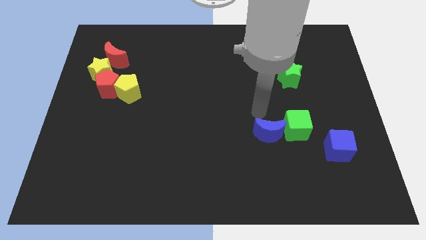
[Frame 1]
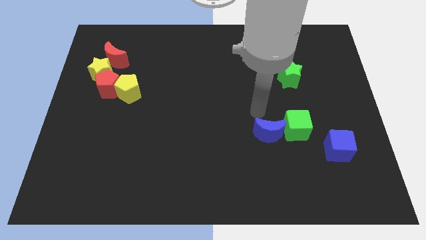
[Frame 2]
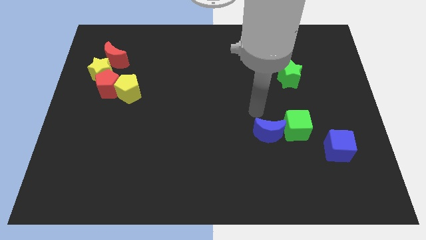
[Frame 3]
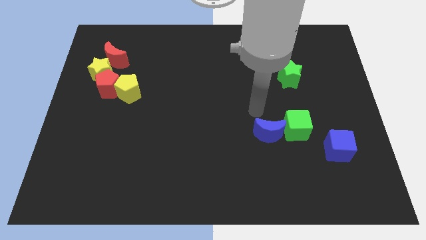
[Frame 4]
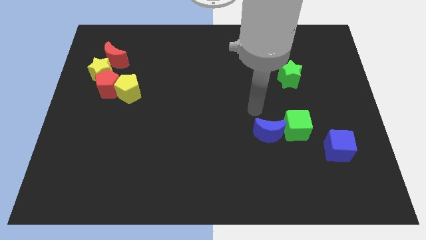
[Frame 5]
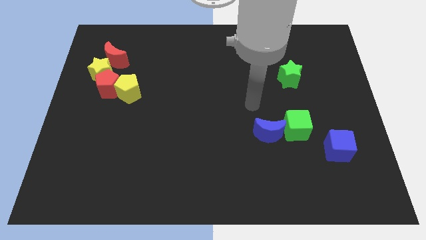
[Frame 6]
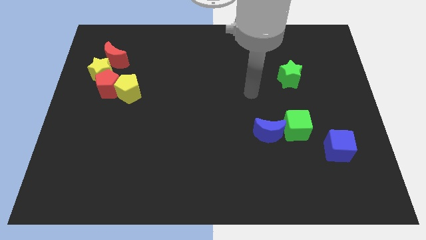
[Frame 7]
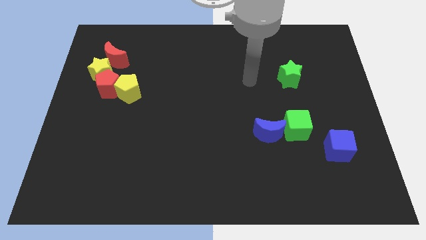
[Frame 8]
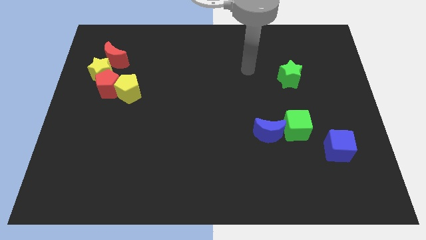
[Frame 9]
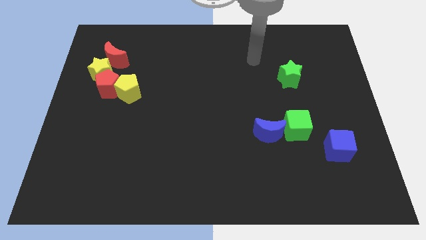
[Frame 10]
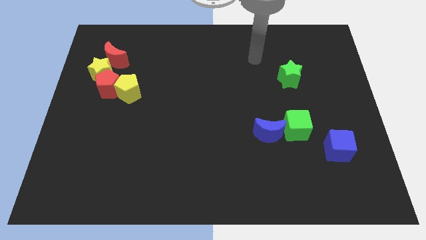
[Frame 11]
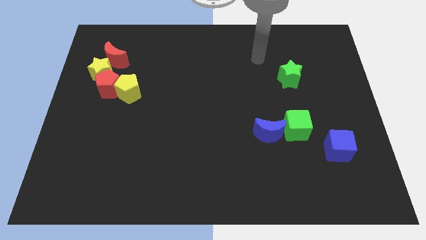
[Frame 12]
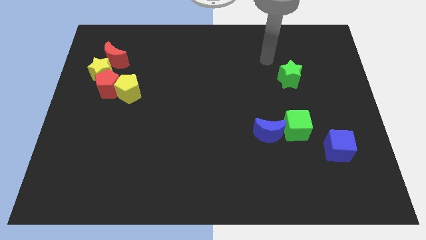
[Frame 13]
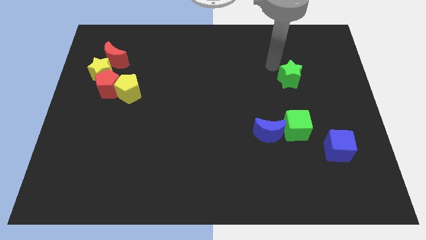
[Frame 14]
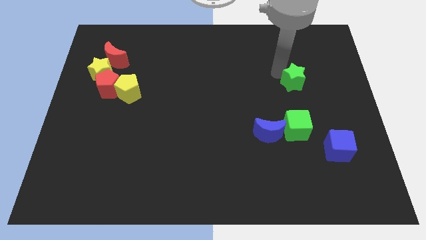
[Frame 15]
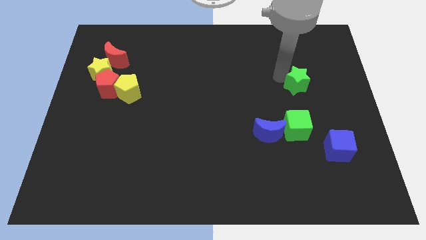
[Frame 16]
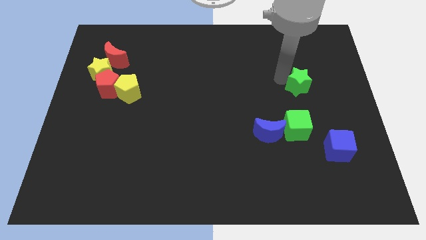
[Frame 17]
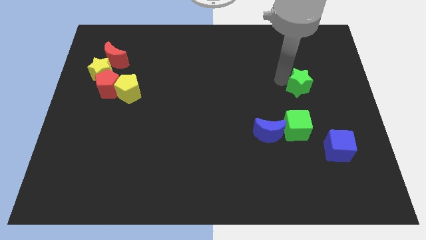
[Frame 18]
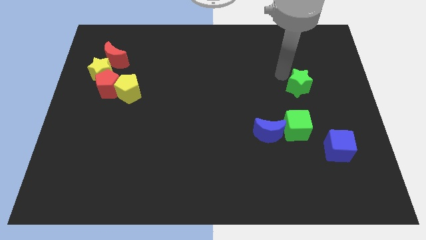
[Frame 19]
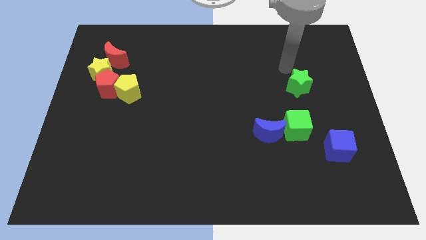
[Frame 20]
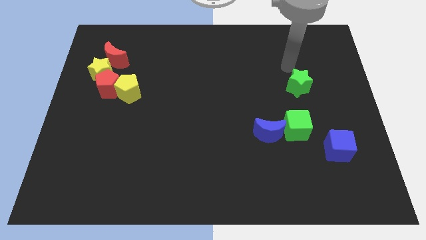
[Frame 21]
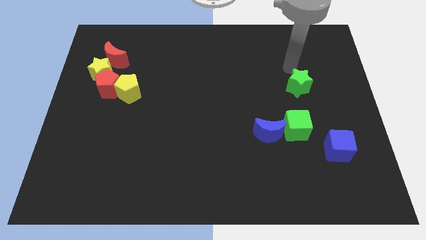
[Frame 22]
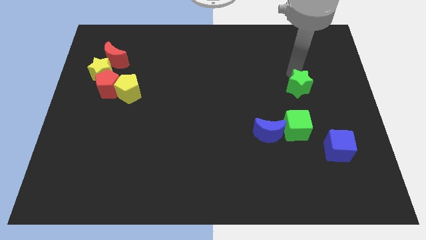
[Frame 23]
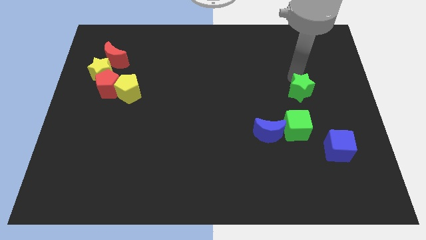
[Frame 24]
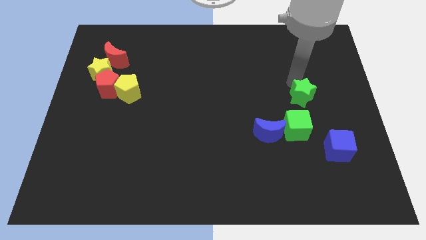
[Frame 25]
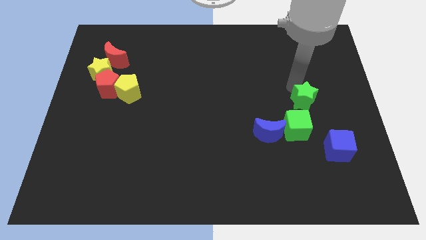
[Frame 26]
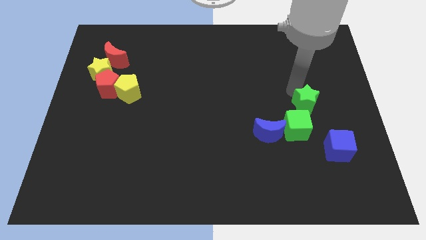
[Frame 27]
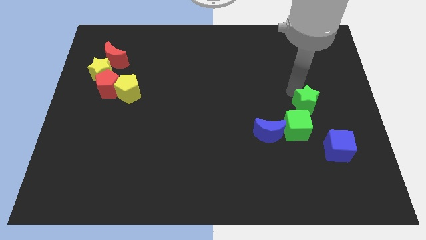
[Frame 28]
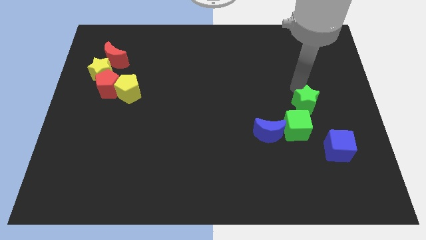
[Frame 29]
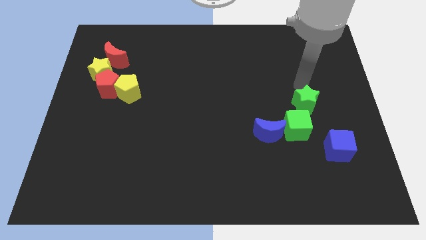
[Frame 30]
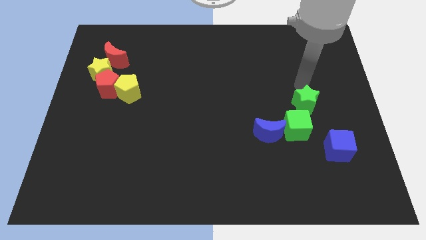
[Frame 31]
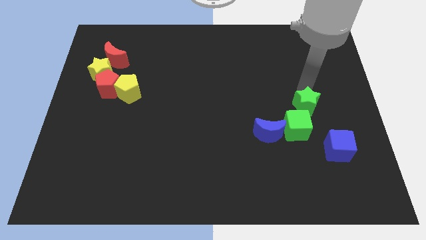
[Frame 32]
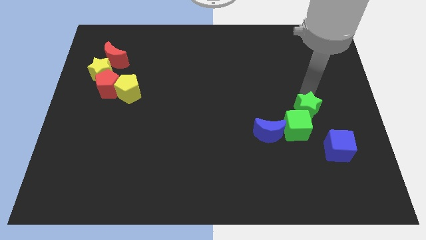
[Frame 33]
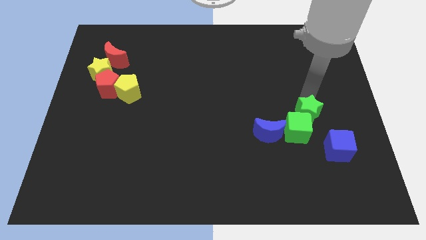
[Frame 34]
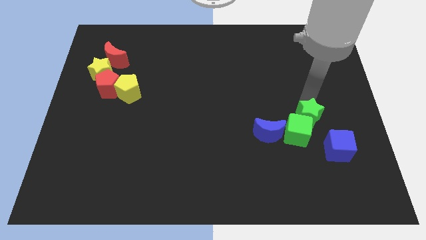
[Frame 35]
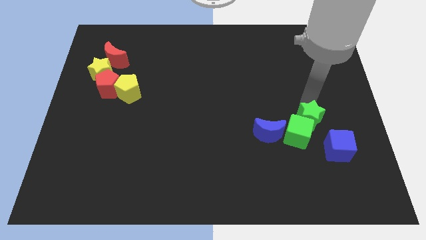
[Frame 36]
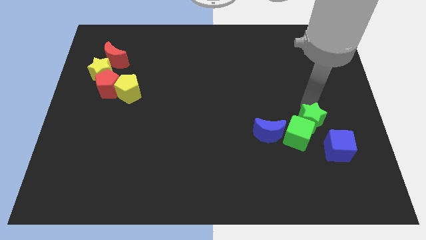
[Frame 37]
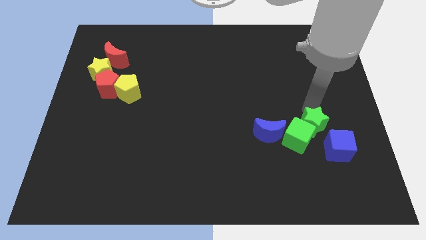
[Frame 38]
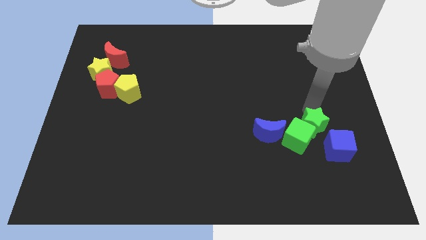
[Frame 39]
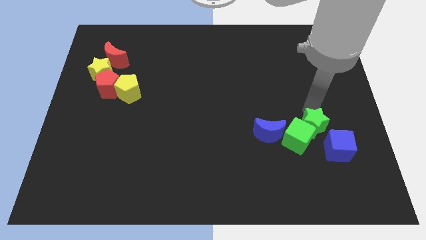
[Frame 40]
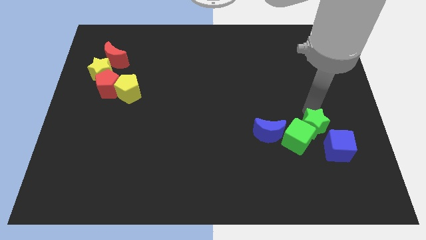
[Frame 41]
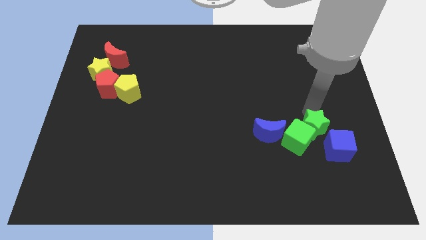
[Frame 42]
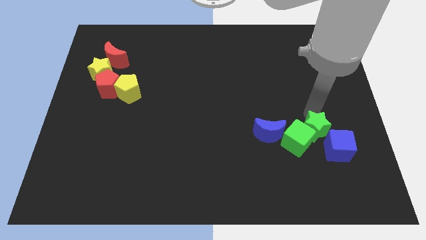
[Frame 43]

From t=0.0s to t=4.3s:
push the green star into the green cube

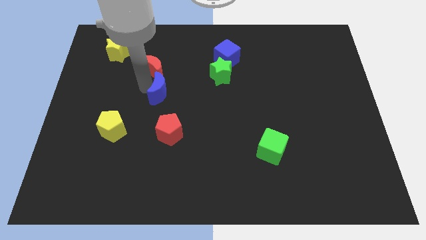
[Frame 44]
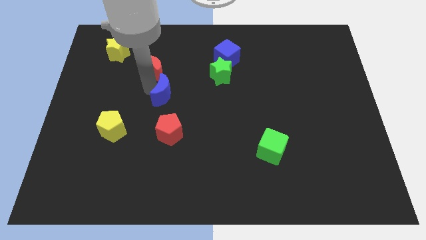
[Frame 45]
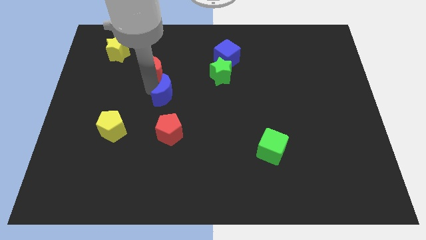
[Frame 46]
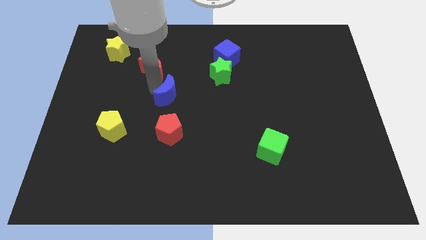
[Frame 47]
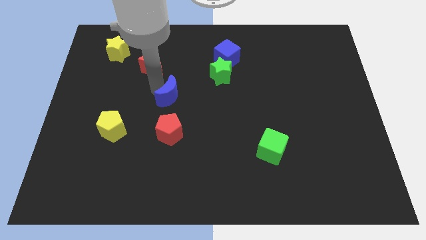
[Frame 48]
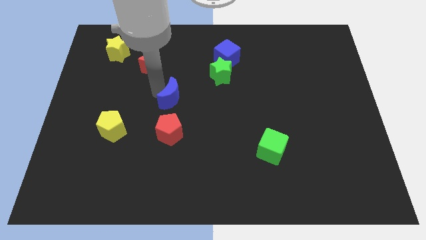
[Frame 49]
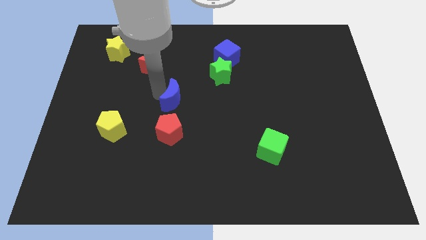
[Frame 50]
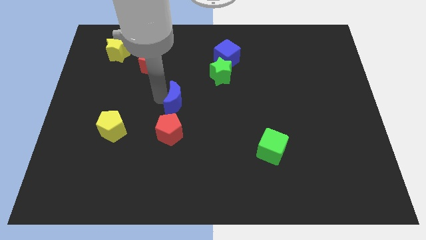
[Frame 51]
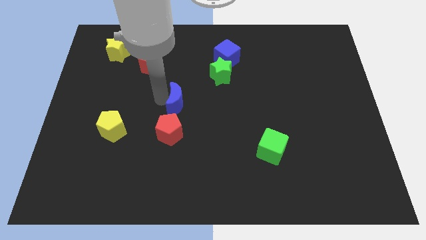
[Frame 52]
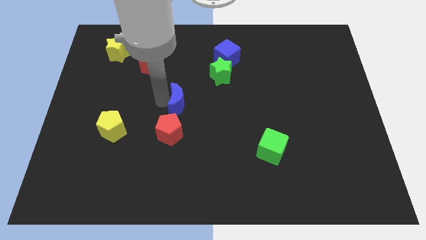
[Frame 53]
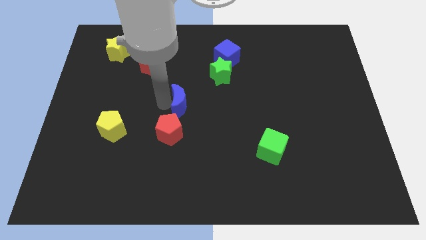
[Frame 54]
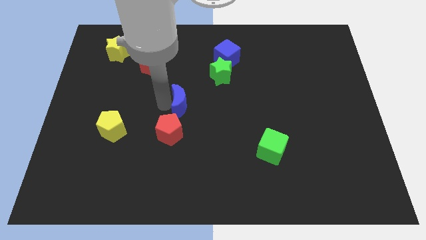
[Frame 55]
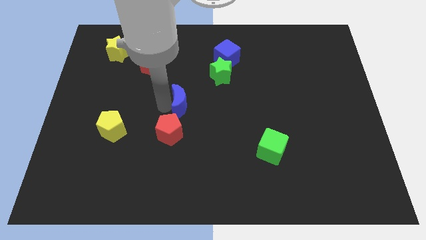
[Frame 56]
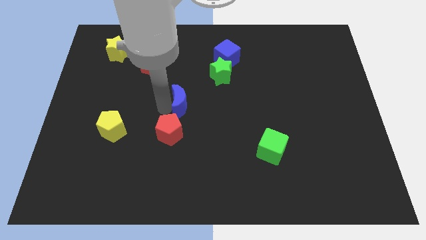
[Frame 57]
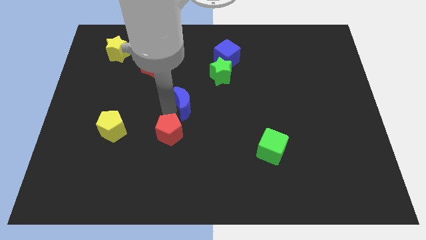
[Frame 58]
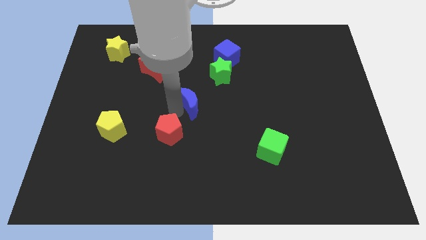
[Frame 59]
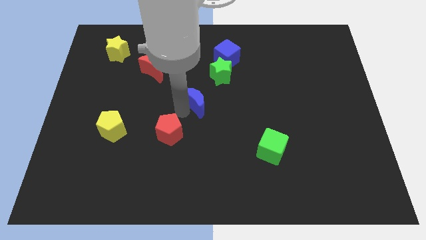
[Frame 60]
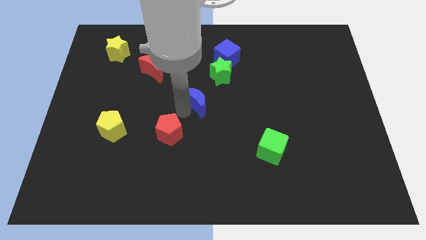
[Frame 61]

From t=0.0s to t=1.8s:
separate the blue moon from the red moon

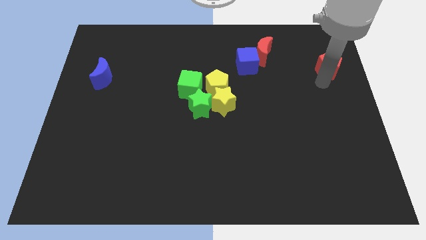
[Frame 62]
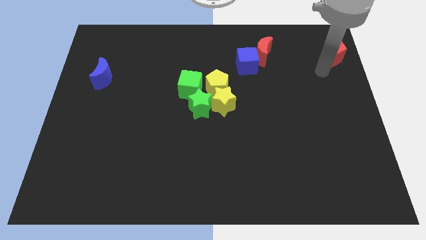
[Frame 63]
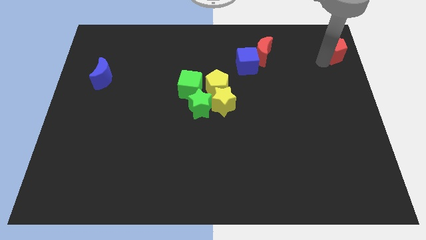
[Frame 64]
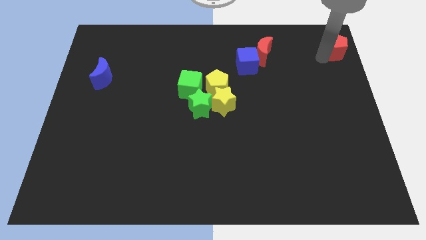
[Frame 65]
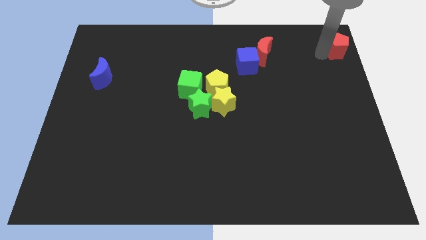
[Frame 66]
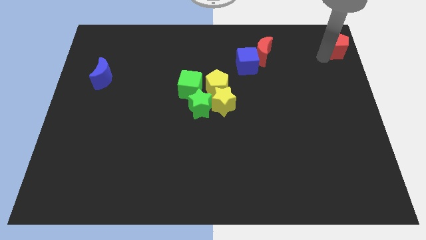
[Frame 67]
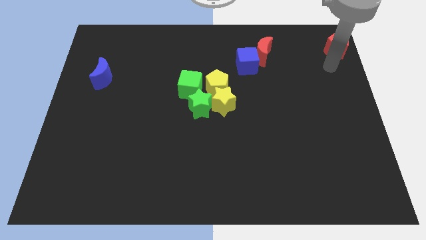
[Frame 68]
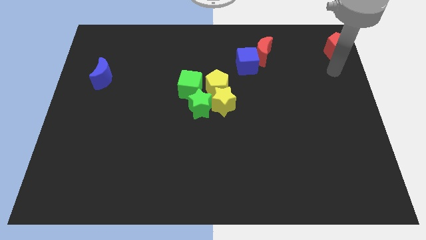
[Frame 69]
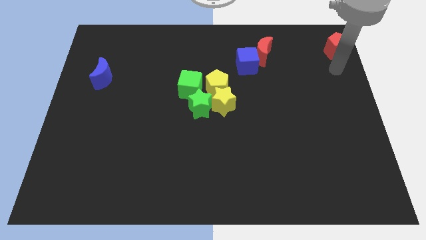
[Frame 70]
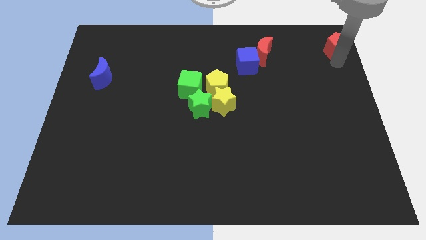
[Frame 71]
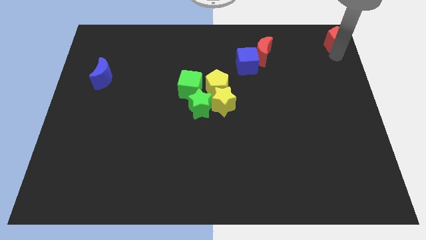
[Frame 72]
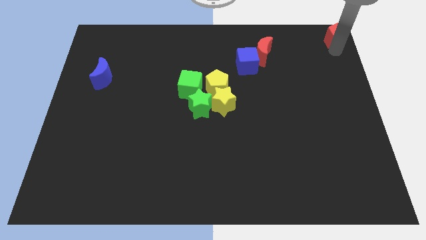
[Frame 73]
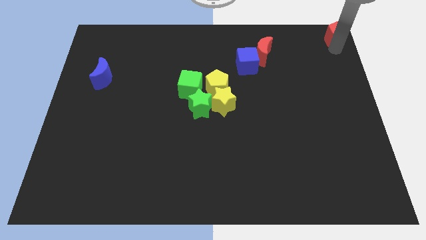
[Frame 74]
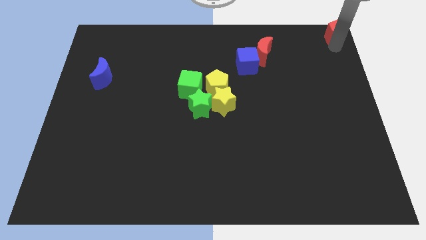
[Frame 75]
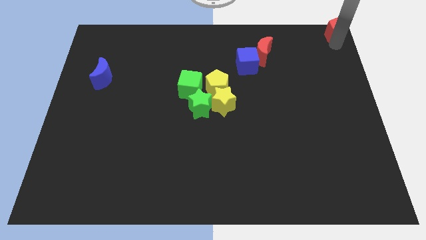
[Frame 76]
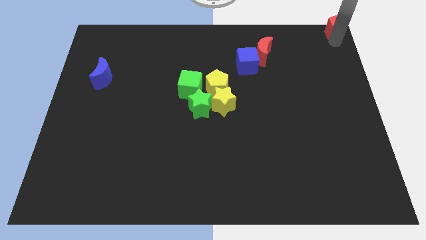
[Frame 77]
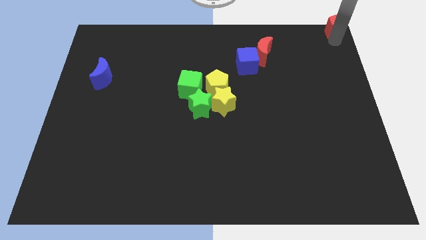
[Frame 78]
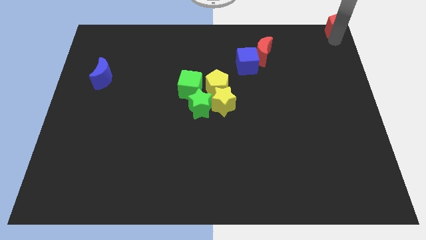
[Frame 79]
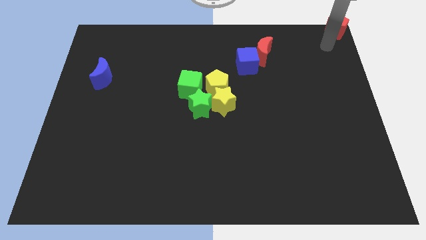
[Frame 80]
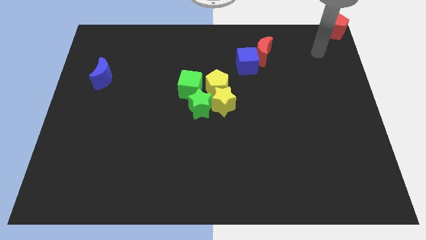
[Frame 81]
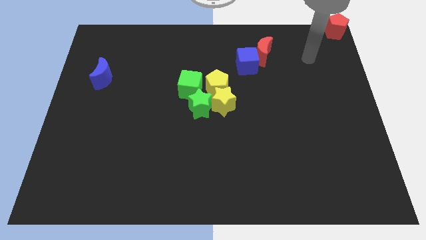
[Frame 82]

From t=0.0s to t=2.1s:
move the red crescent to the top right on the board

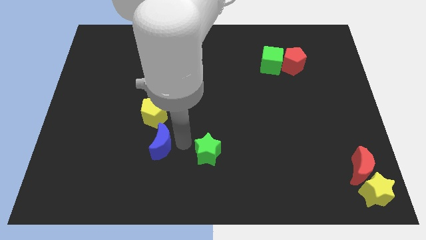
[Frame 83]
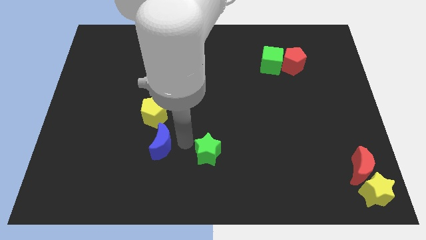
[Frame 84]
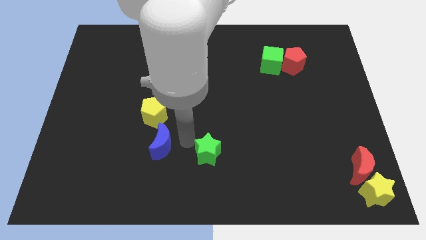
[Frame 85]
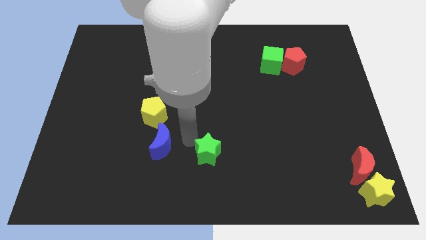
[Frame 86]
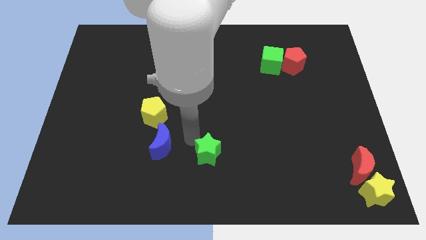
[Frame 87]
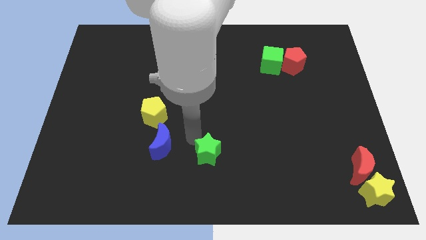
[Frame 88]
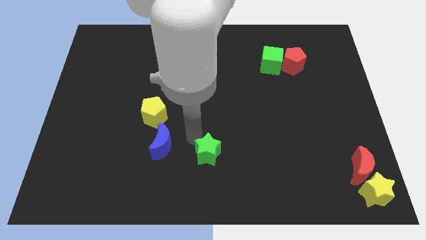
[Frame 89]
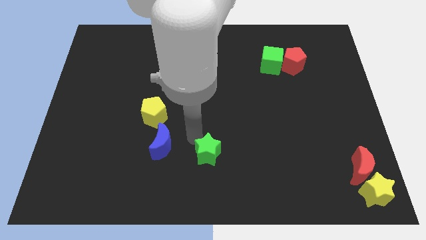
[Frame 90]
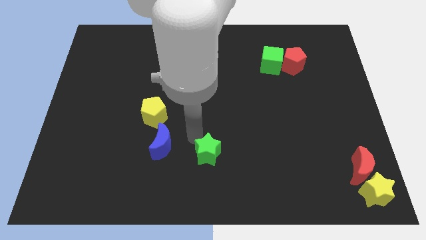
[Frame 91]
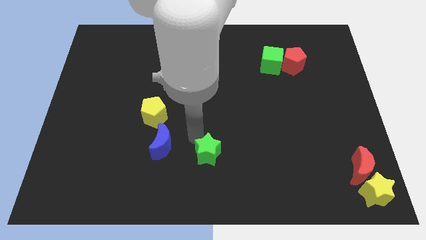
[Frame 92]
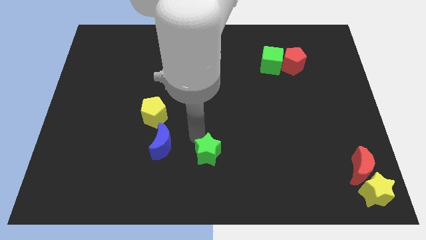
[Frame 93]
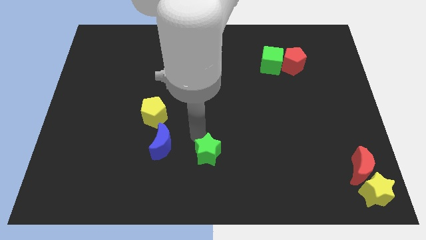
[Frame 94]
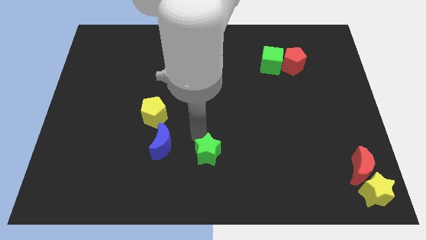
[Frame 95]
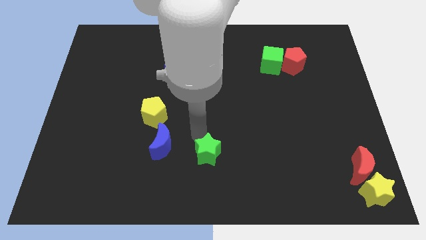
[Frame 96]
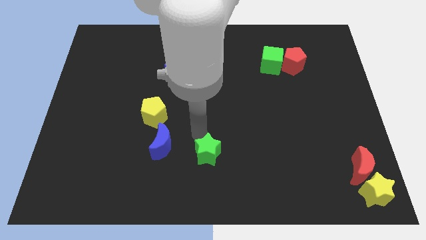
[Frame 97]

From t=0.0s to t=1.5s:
move your arm to the top of the green star
